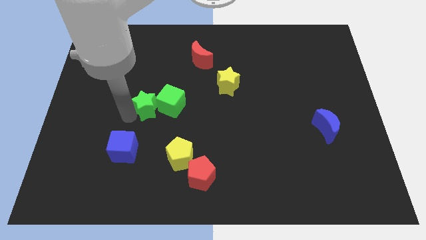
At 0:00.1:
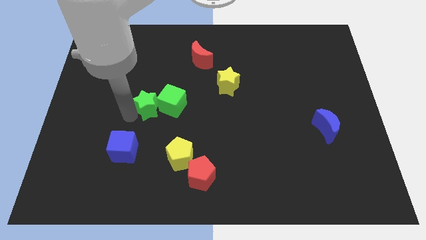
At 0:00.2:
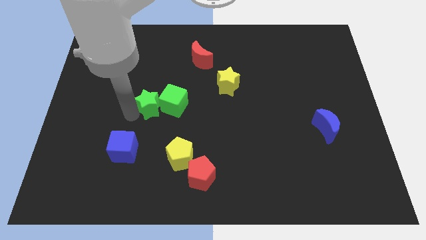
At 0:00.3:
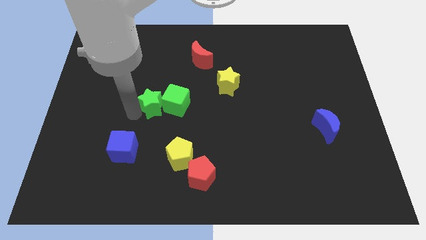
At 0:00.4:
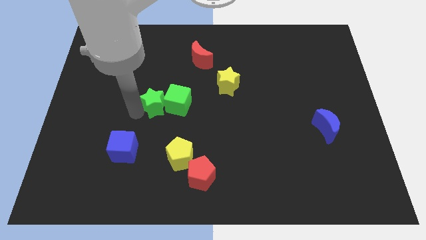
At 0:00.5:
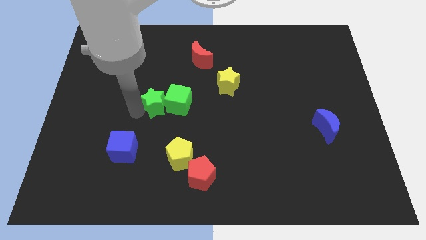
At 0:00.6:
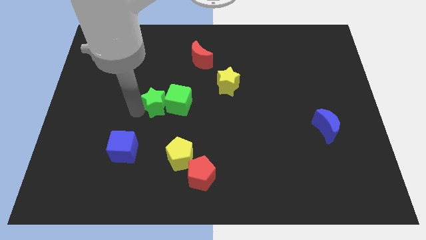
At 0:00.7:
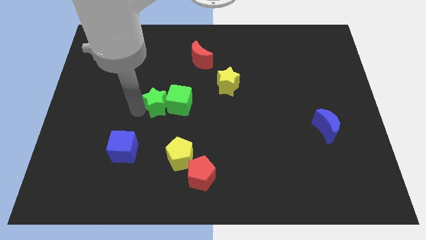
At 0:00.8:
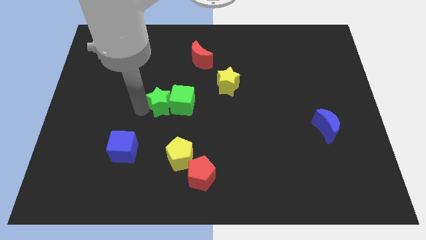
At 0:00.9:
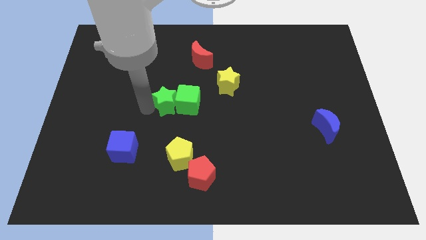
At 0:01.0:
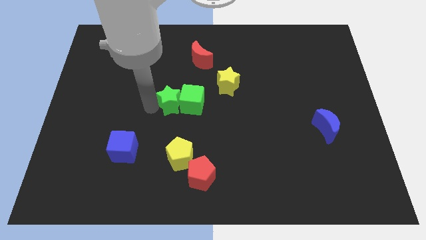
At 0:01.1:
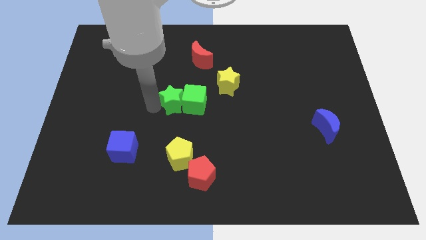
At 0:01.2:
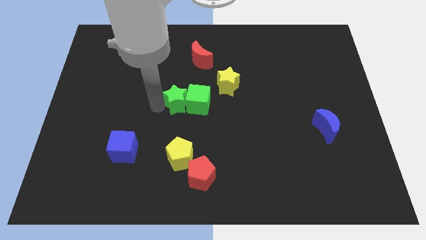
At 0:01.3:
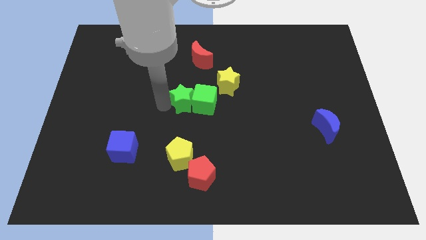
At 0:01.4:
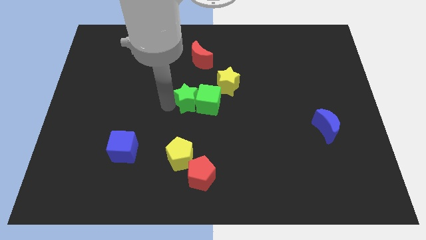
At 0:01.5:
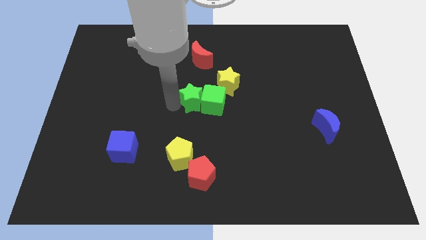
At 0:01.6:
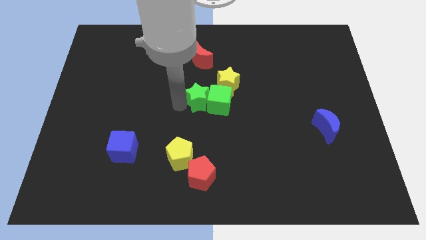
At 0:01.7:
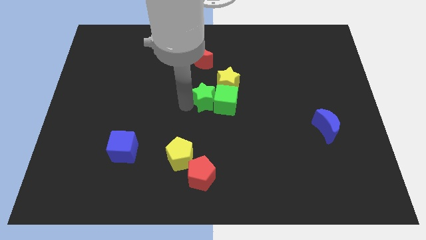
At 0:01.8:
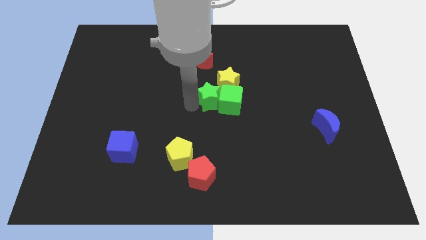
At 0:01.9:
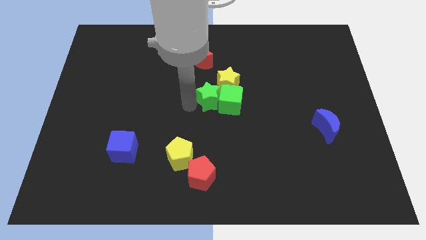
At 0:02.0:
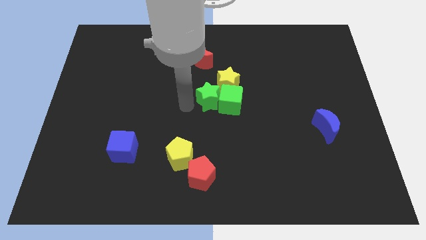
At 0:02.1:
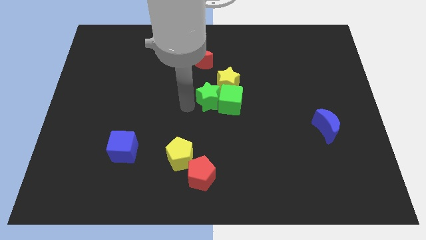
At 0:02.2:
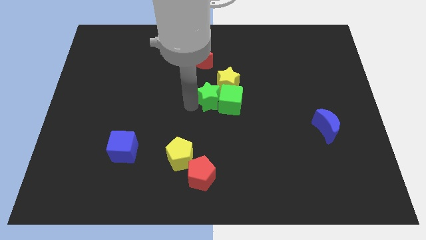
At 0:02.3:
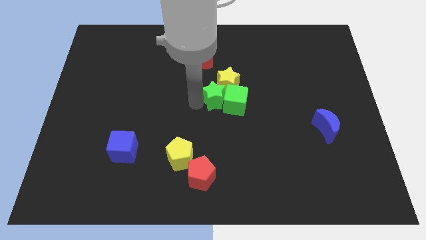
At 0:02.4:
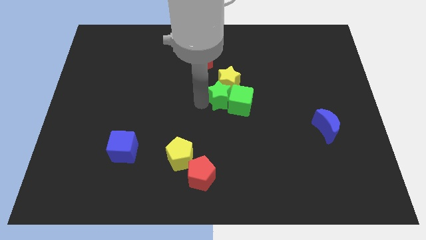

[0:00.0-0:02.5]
move the green star along with green cube below the yellow star

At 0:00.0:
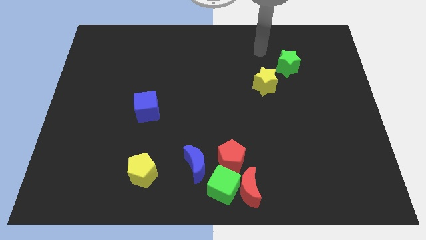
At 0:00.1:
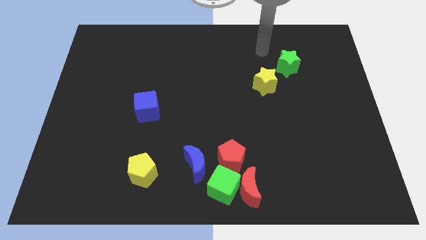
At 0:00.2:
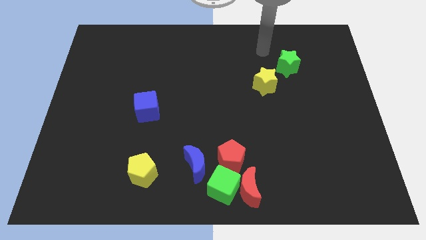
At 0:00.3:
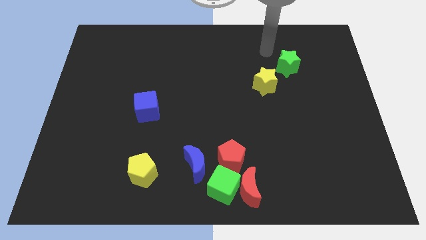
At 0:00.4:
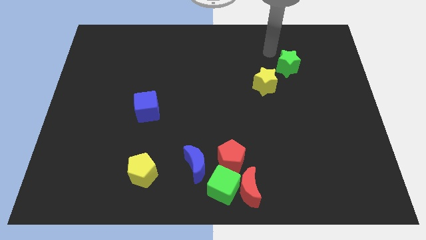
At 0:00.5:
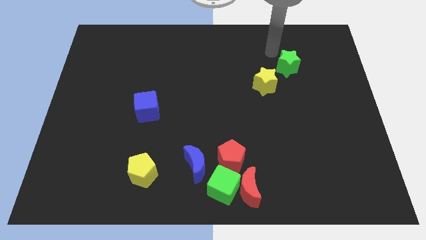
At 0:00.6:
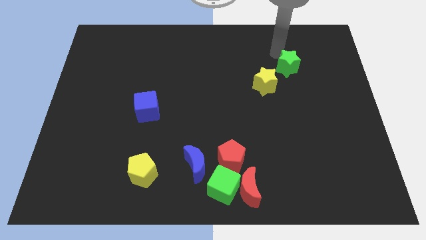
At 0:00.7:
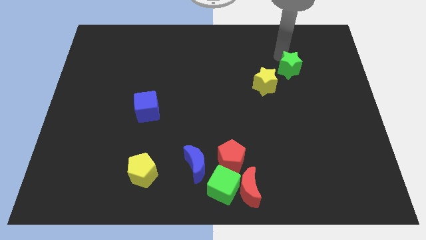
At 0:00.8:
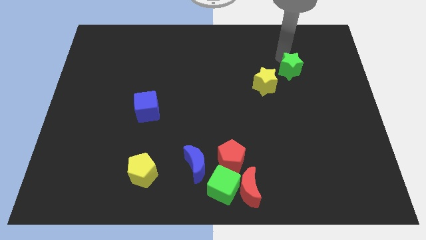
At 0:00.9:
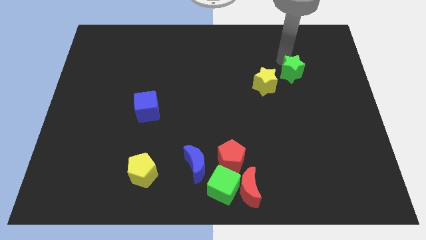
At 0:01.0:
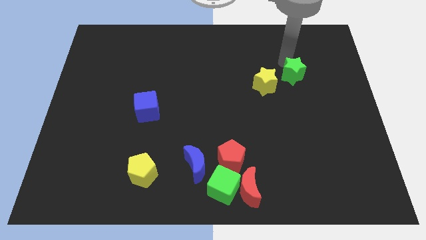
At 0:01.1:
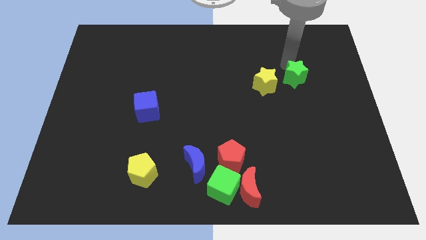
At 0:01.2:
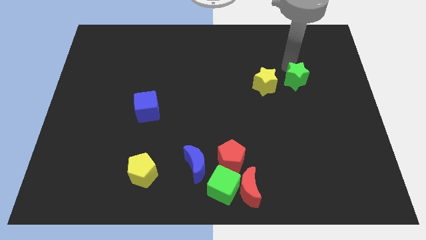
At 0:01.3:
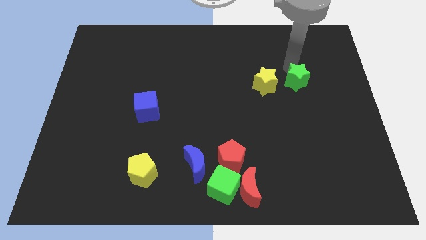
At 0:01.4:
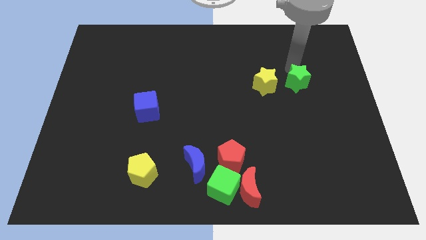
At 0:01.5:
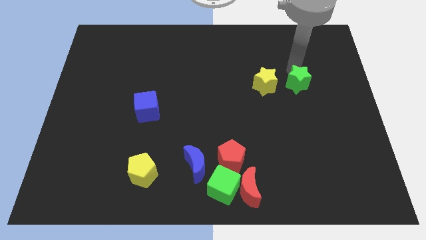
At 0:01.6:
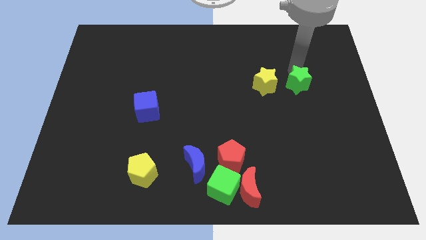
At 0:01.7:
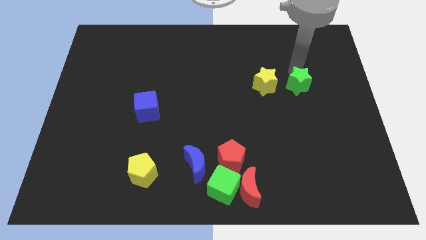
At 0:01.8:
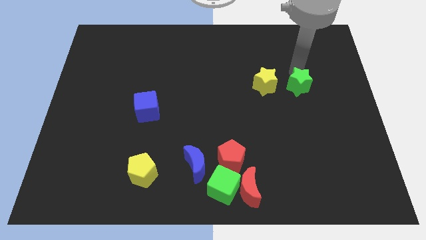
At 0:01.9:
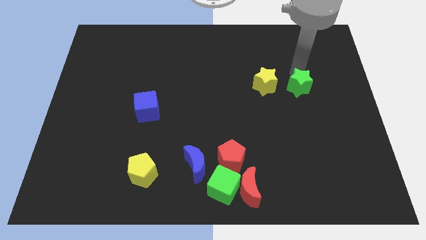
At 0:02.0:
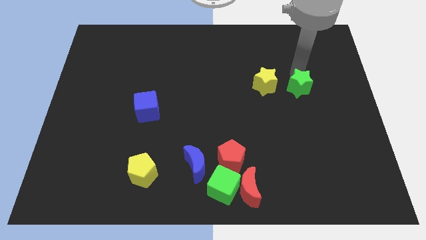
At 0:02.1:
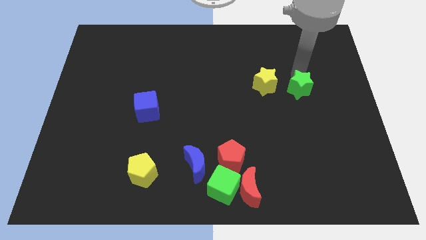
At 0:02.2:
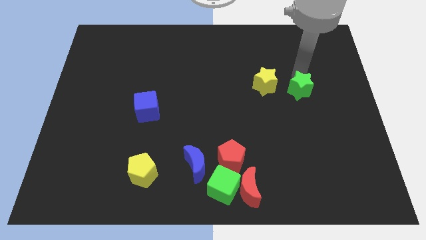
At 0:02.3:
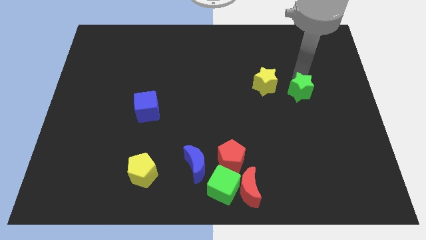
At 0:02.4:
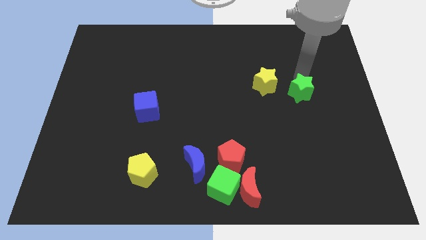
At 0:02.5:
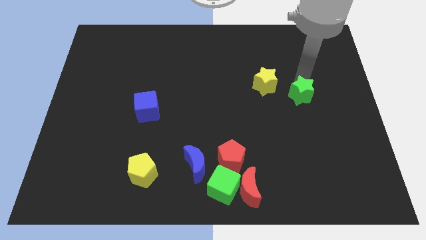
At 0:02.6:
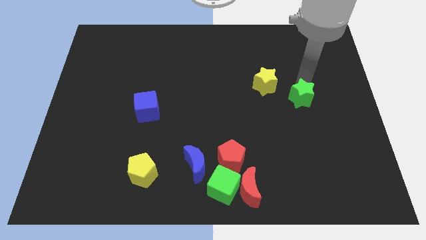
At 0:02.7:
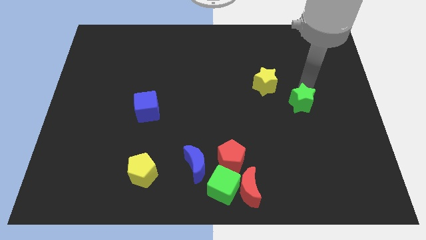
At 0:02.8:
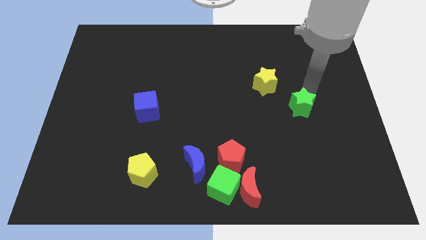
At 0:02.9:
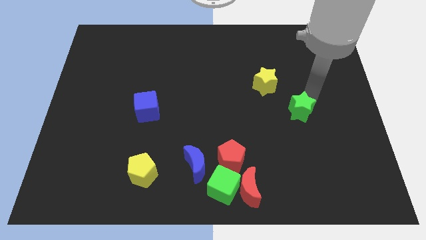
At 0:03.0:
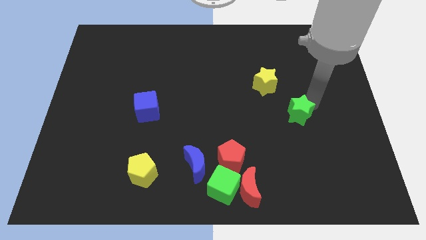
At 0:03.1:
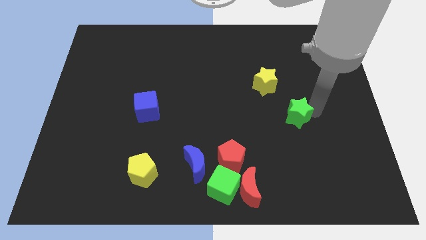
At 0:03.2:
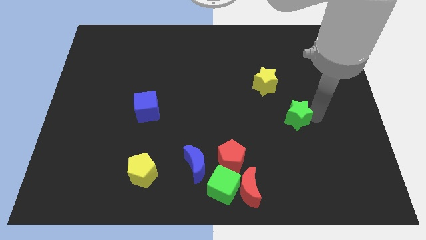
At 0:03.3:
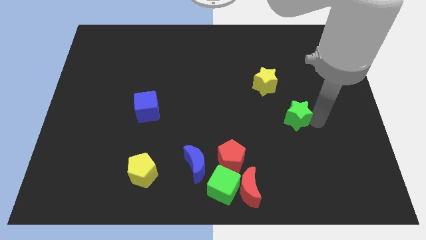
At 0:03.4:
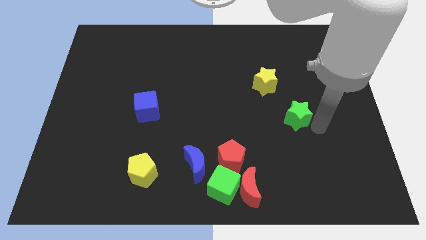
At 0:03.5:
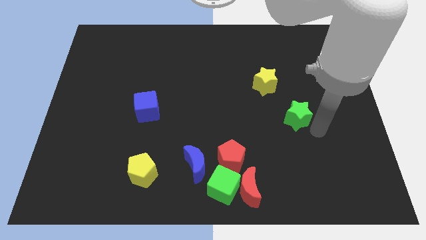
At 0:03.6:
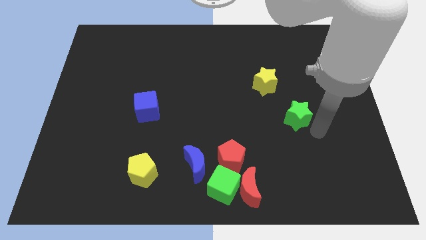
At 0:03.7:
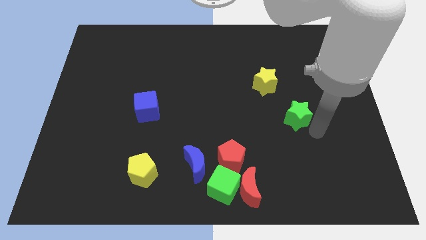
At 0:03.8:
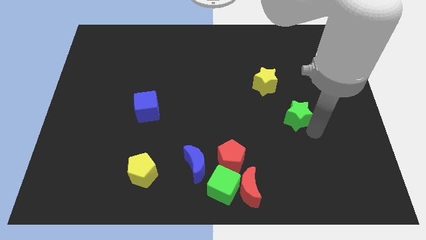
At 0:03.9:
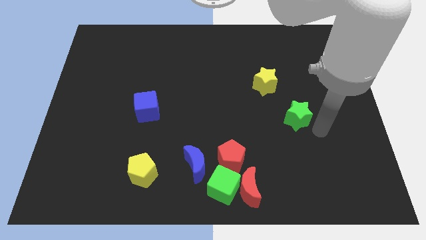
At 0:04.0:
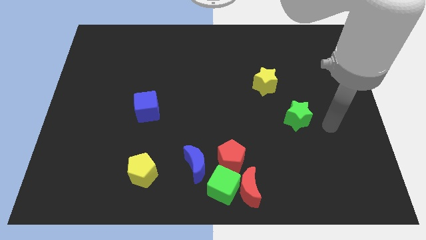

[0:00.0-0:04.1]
slide green star diagonally to the bottom of the yellow star

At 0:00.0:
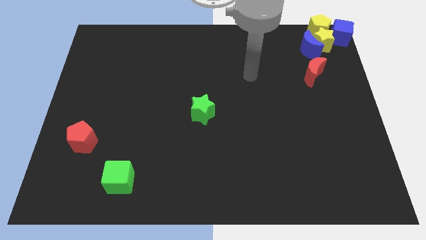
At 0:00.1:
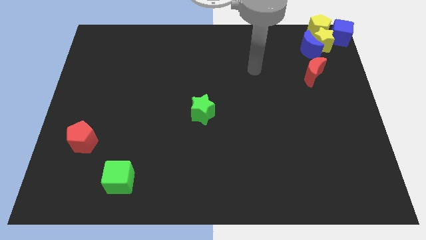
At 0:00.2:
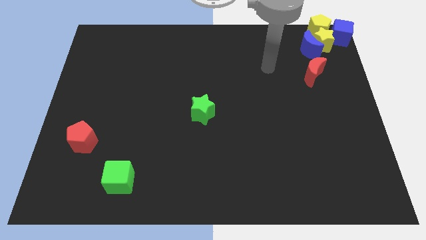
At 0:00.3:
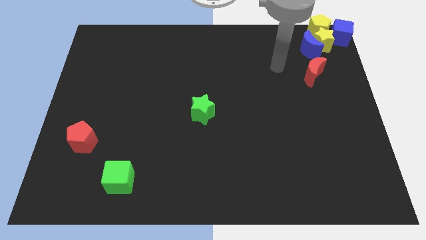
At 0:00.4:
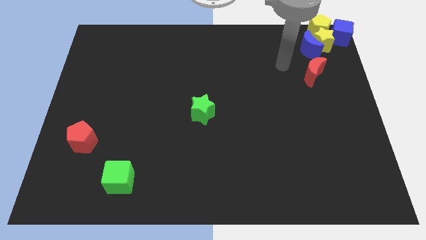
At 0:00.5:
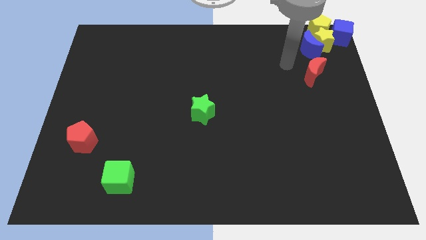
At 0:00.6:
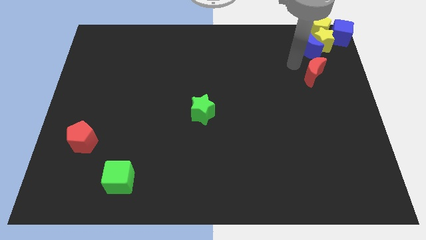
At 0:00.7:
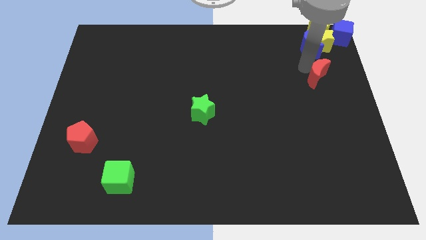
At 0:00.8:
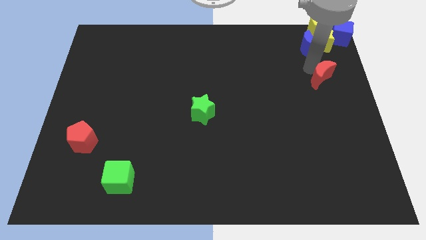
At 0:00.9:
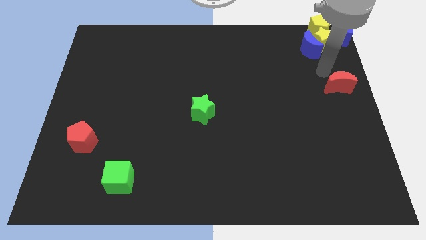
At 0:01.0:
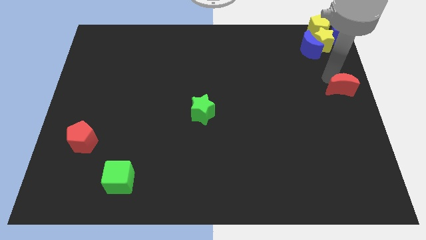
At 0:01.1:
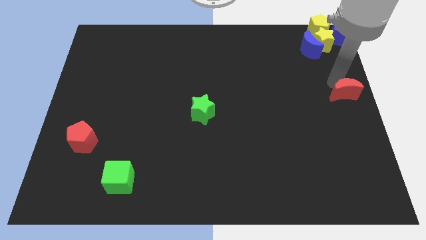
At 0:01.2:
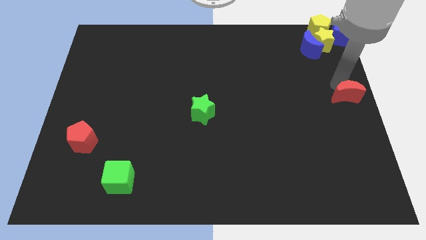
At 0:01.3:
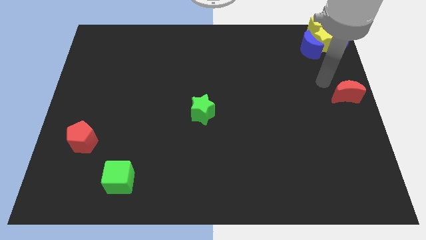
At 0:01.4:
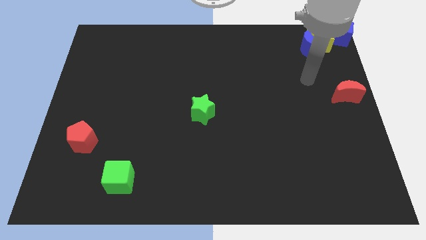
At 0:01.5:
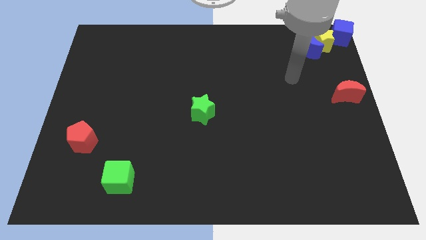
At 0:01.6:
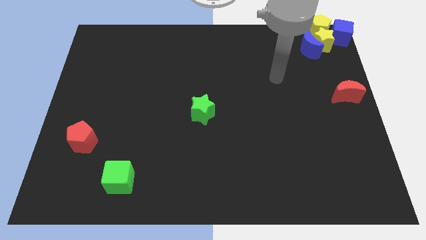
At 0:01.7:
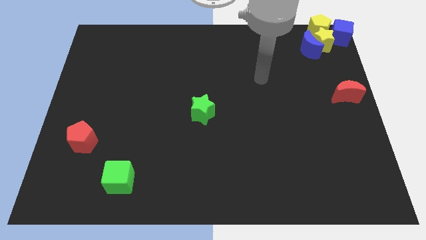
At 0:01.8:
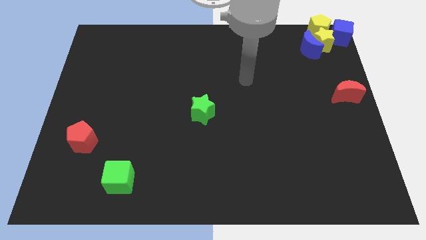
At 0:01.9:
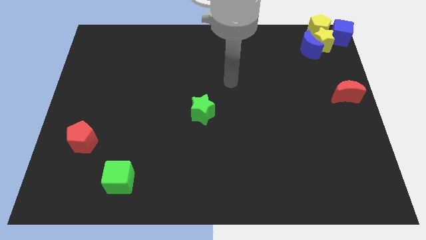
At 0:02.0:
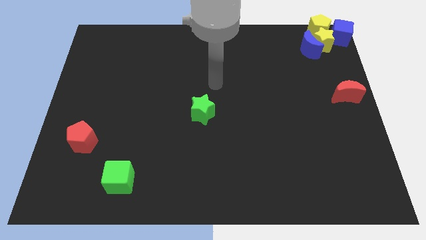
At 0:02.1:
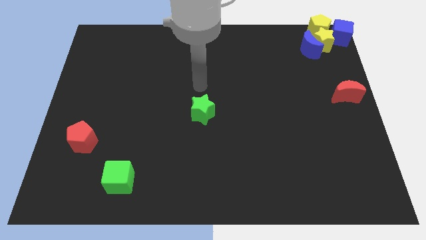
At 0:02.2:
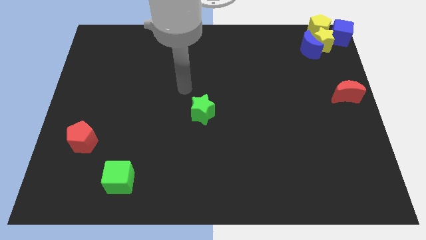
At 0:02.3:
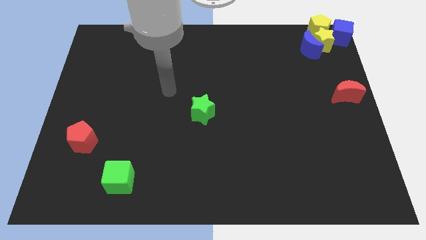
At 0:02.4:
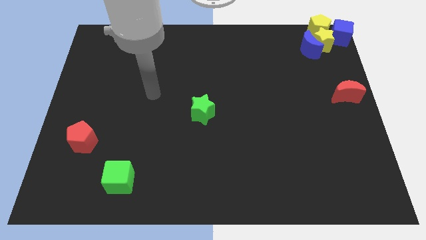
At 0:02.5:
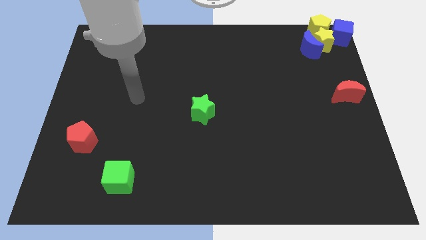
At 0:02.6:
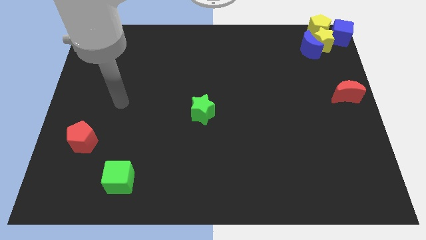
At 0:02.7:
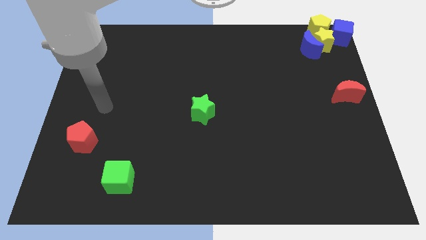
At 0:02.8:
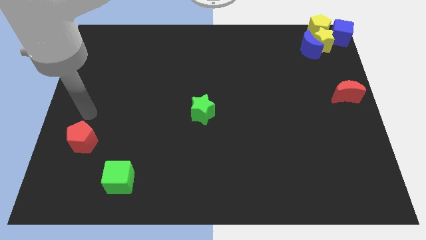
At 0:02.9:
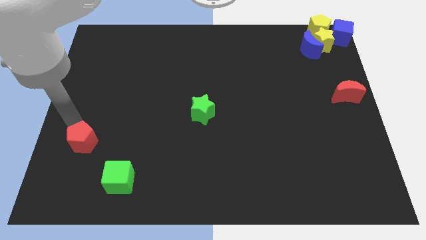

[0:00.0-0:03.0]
place red moon at center right of board
